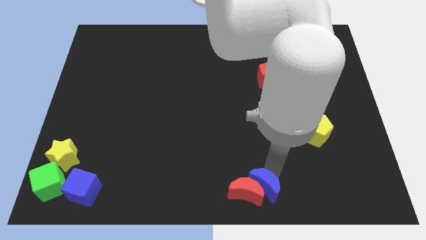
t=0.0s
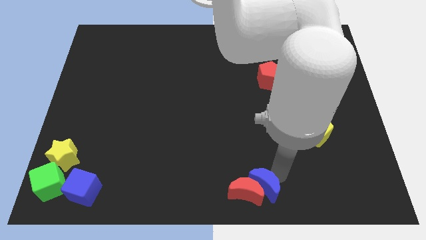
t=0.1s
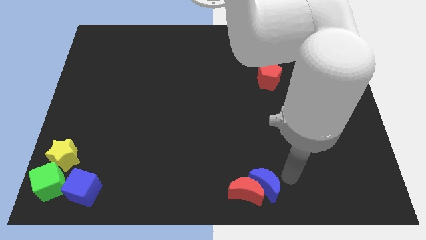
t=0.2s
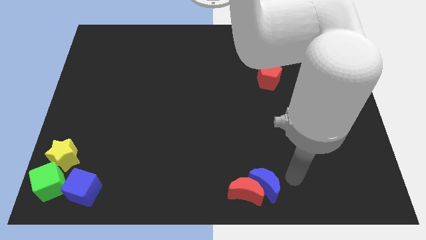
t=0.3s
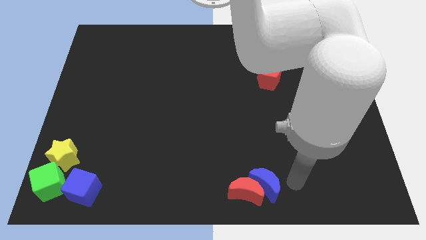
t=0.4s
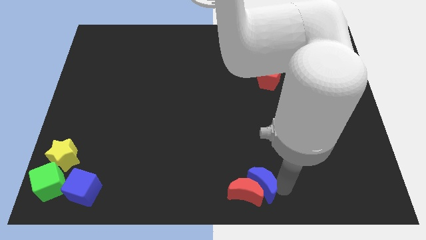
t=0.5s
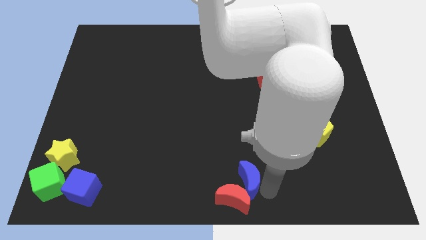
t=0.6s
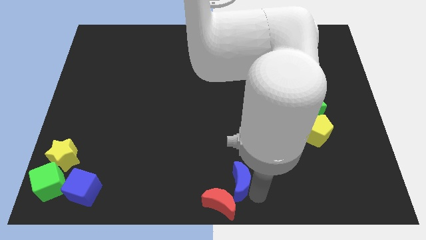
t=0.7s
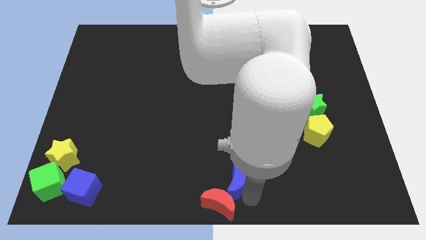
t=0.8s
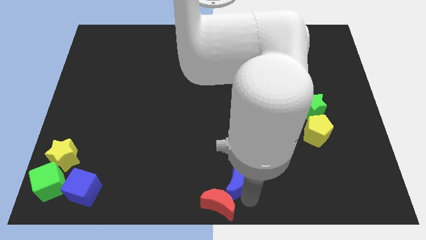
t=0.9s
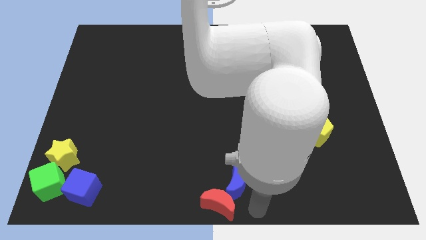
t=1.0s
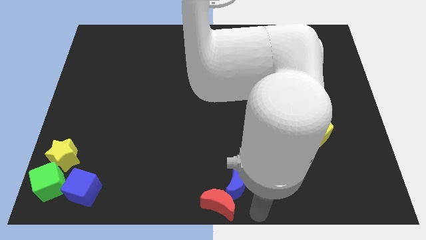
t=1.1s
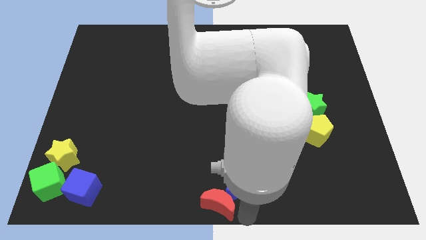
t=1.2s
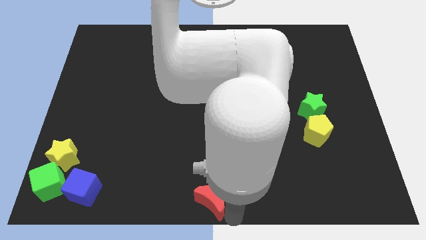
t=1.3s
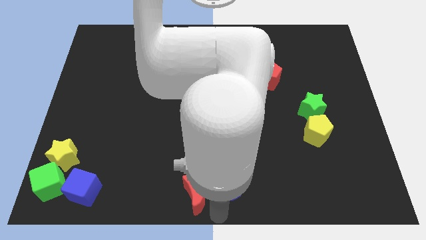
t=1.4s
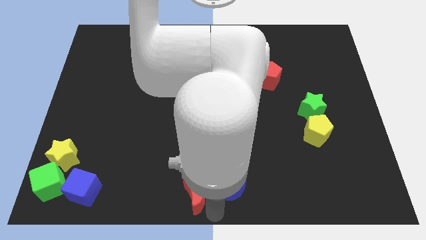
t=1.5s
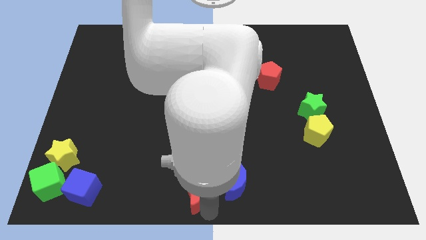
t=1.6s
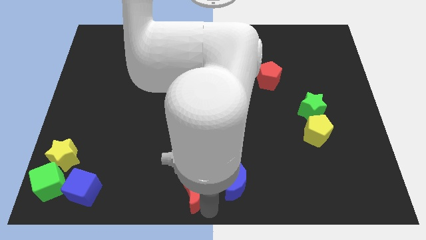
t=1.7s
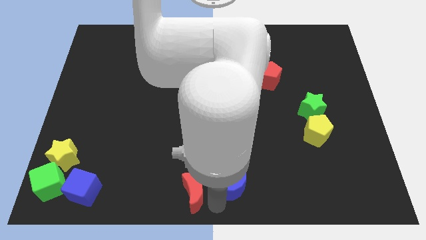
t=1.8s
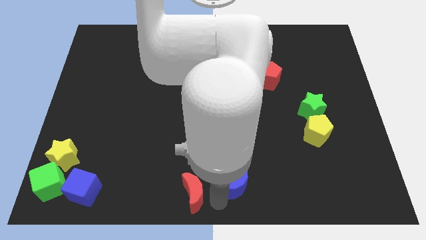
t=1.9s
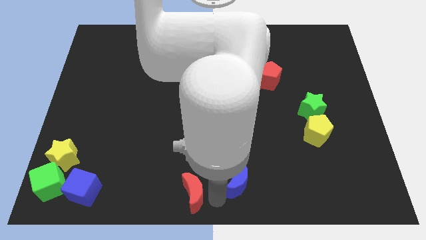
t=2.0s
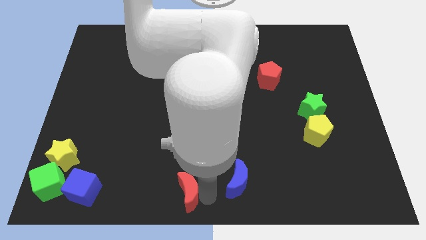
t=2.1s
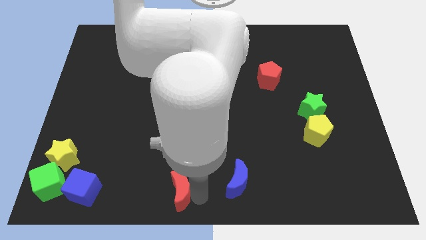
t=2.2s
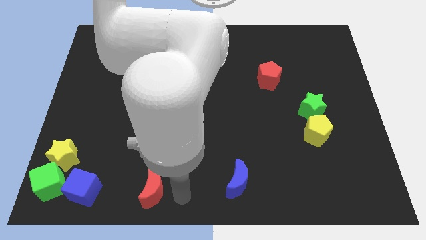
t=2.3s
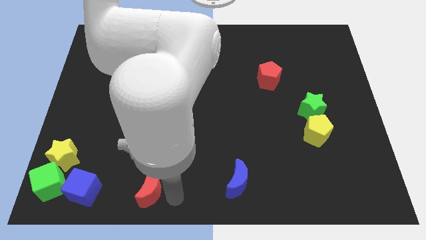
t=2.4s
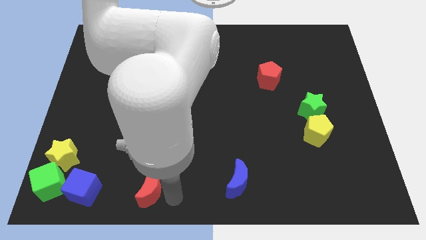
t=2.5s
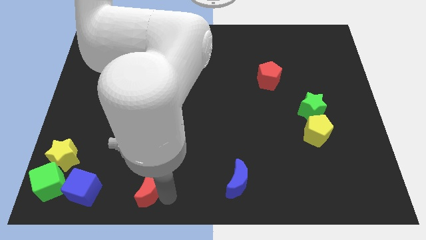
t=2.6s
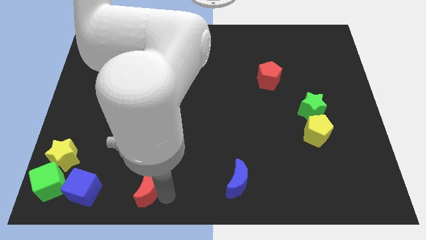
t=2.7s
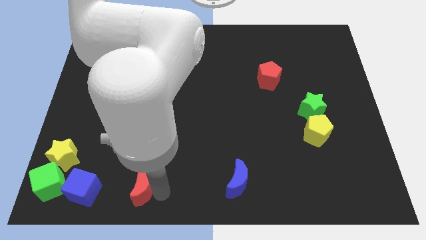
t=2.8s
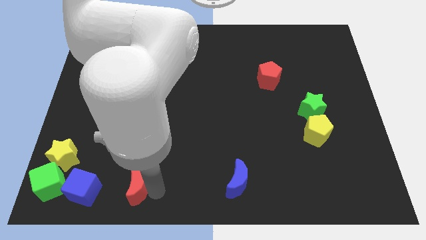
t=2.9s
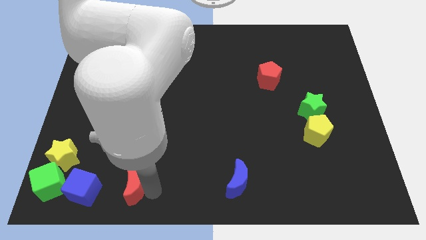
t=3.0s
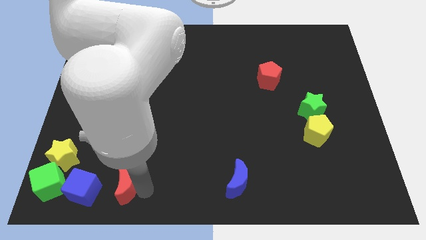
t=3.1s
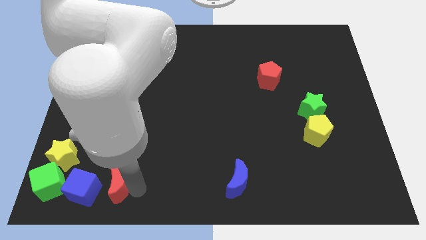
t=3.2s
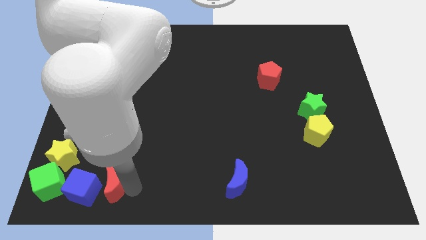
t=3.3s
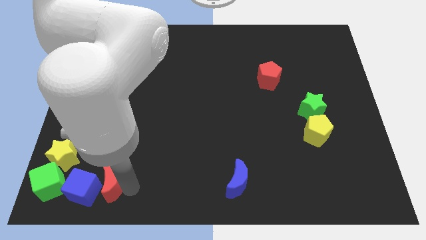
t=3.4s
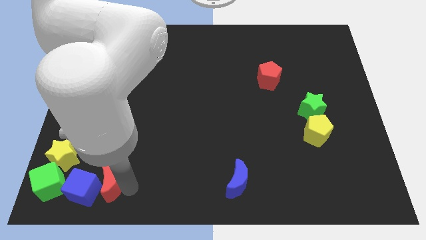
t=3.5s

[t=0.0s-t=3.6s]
place the red moon top right to the blue cube

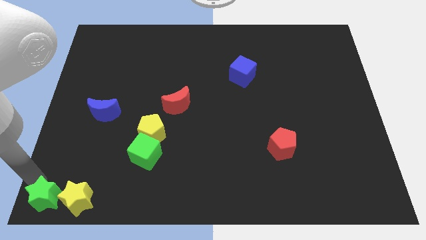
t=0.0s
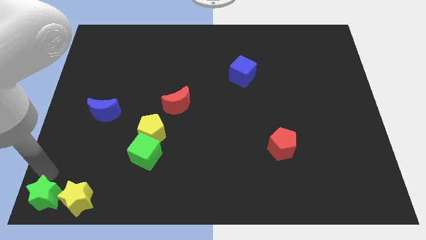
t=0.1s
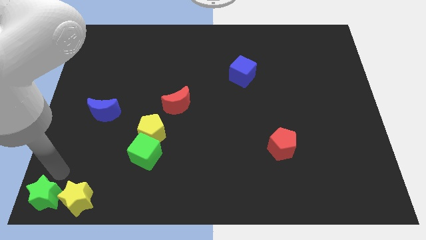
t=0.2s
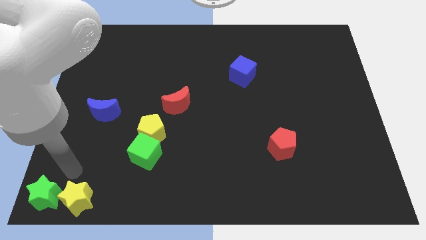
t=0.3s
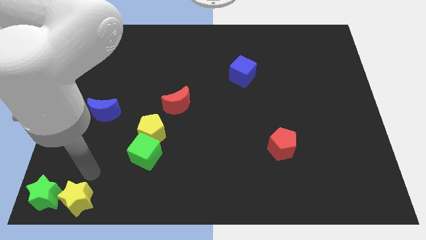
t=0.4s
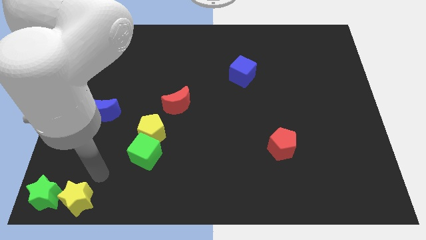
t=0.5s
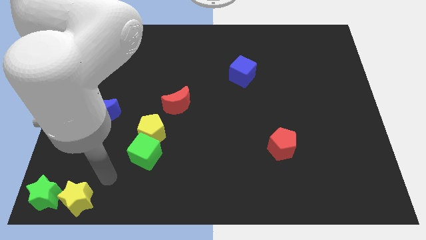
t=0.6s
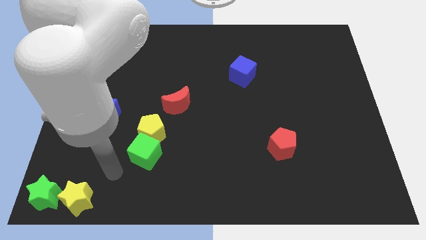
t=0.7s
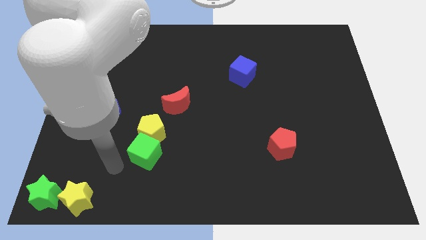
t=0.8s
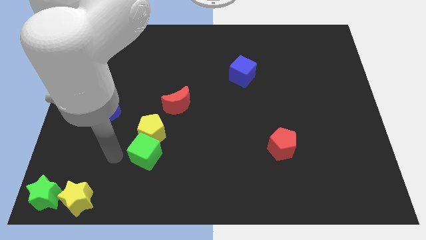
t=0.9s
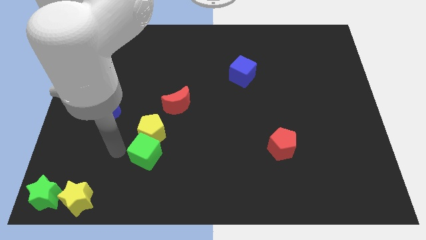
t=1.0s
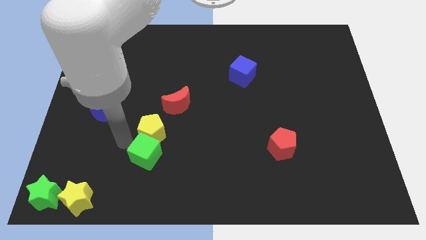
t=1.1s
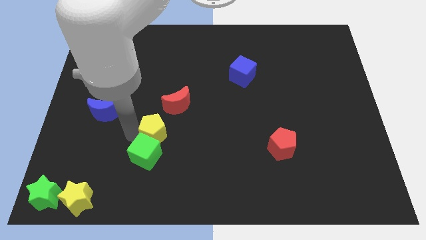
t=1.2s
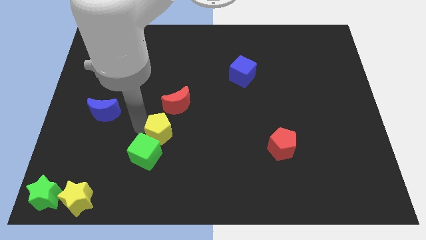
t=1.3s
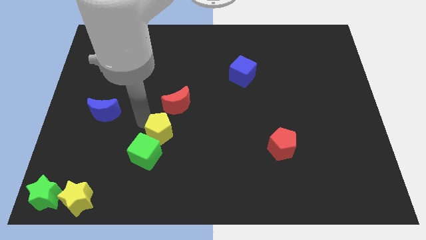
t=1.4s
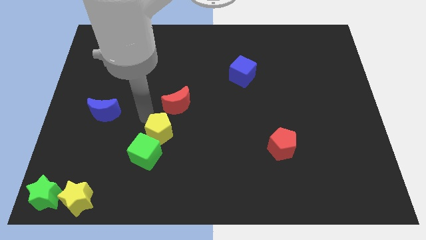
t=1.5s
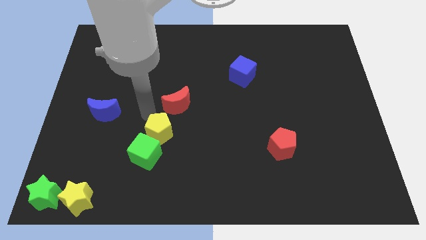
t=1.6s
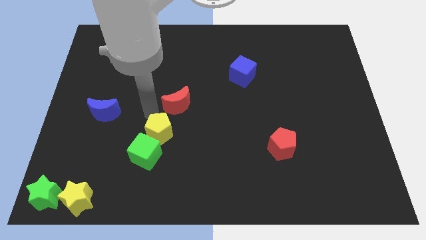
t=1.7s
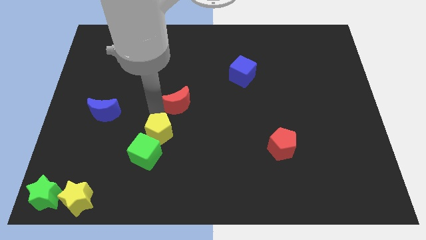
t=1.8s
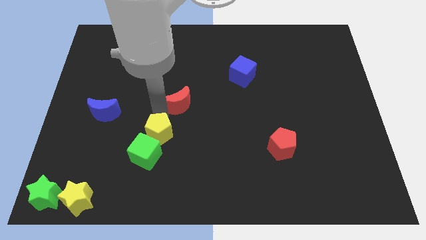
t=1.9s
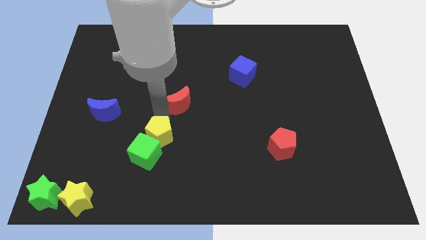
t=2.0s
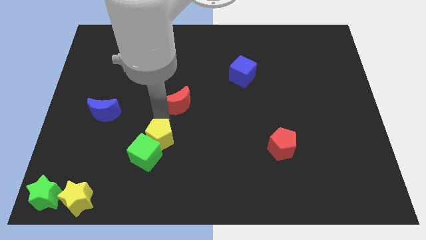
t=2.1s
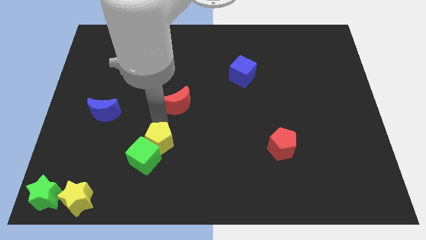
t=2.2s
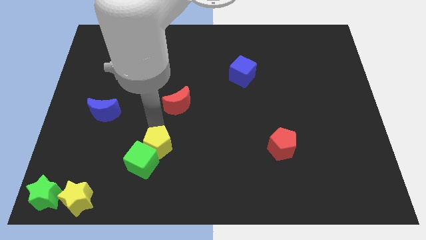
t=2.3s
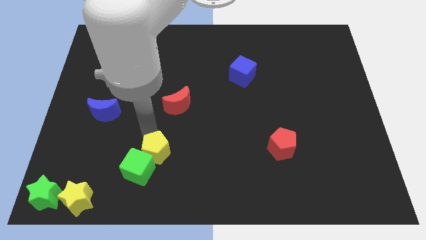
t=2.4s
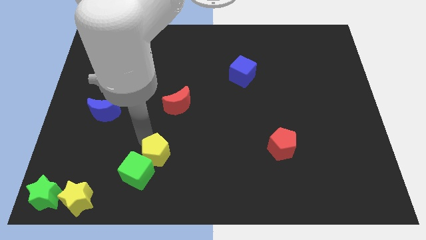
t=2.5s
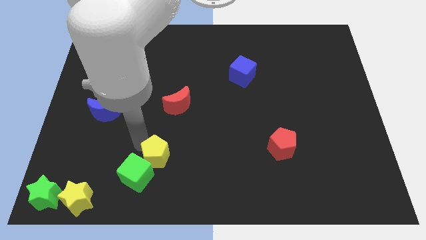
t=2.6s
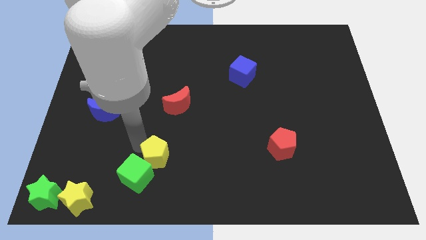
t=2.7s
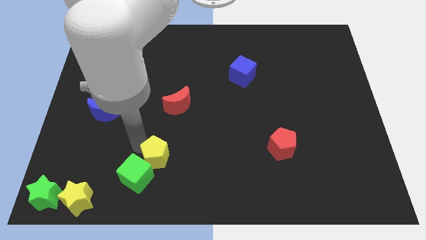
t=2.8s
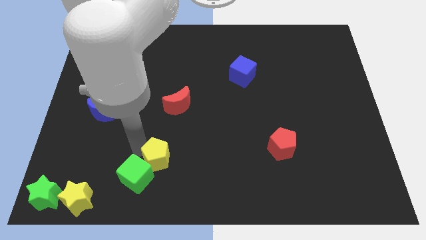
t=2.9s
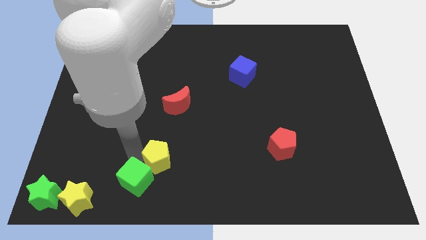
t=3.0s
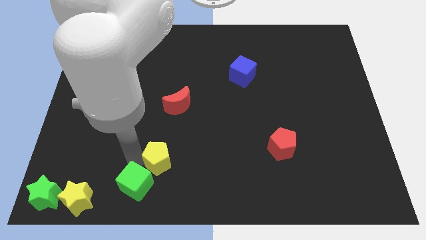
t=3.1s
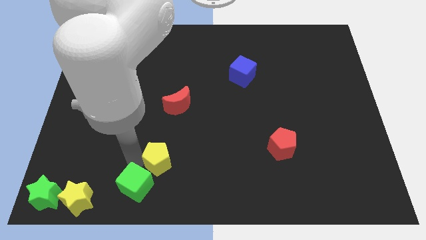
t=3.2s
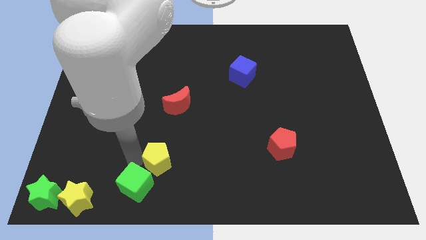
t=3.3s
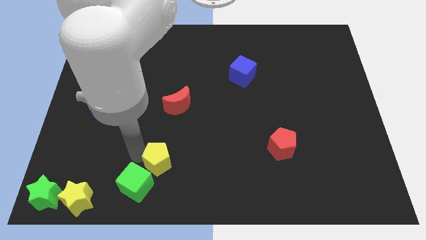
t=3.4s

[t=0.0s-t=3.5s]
push the green cube with the yellow star slightly towards the the bottom left of the board

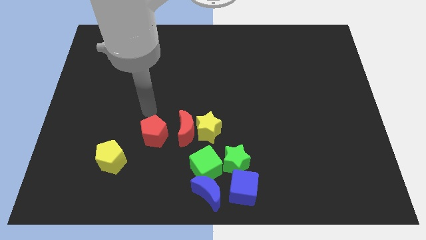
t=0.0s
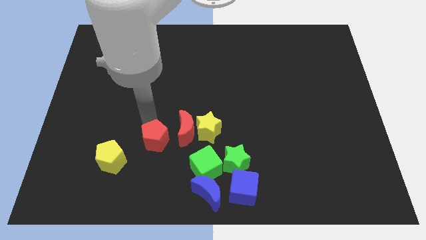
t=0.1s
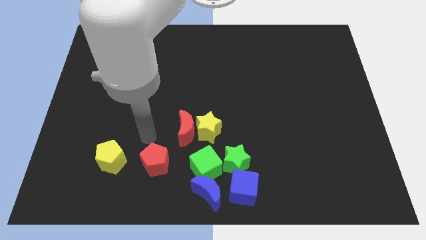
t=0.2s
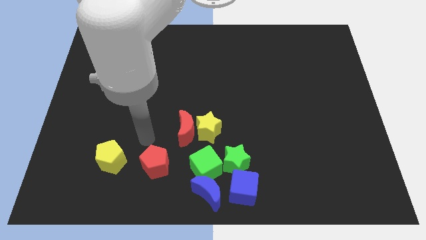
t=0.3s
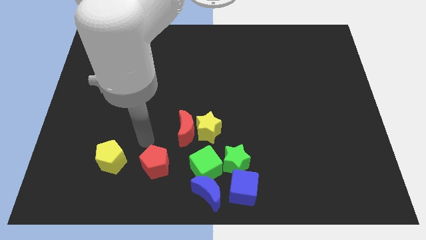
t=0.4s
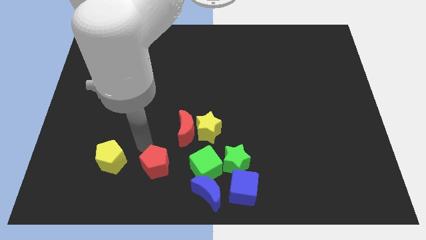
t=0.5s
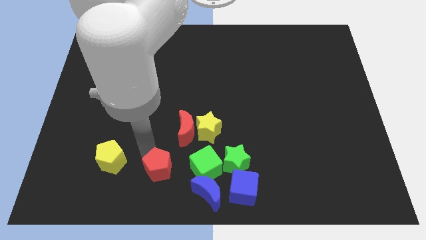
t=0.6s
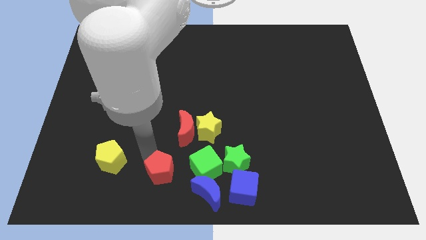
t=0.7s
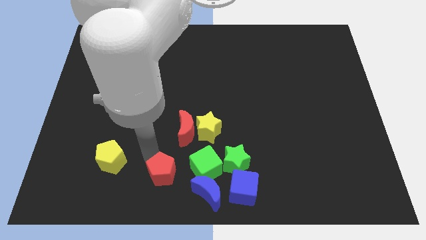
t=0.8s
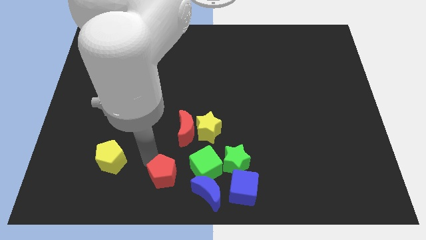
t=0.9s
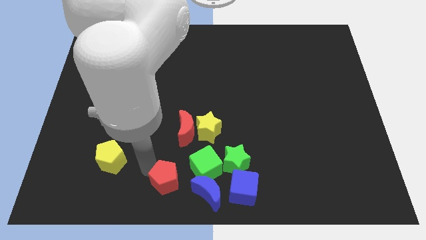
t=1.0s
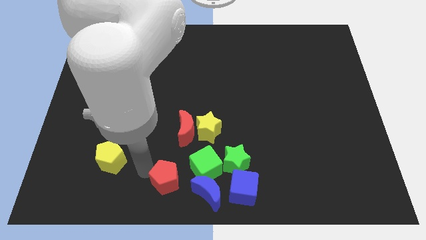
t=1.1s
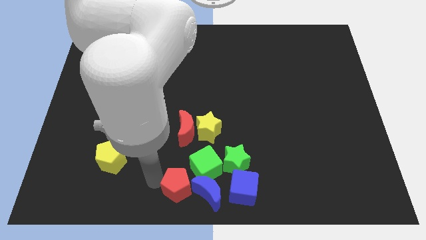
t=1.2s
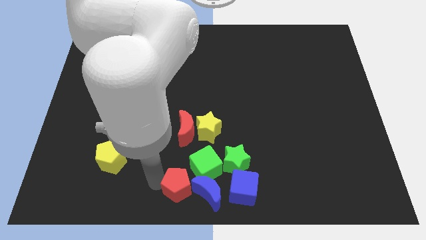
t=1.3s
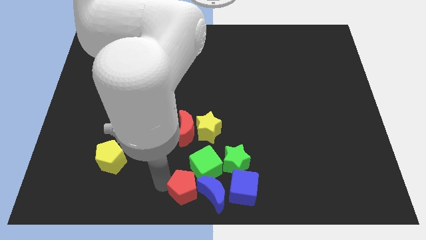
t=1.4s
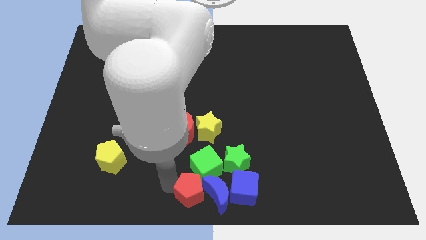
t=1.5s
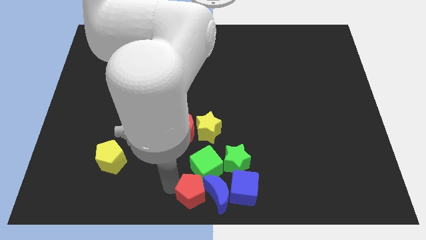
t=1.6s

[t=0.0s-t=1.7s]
push the red pentagon into the group of blocks

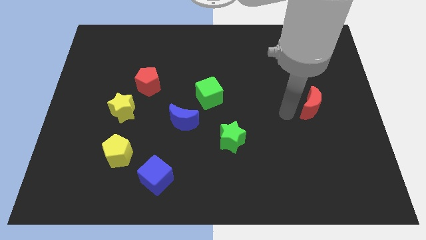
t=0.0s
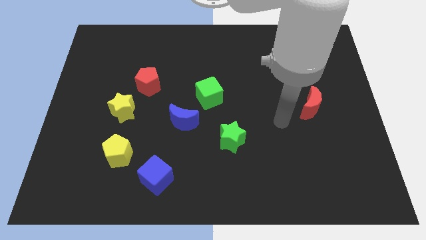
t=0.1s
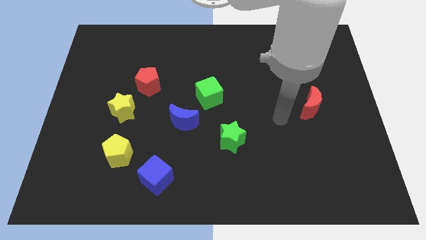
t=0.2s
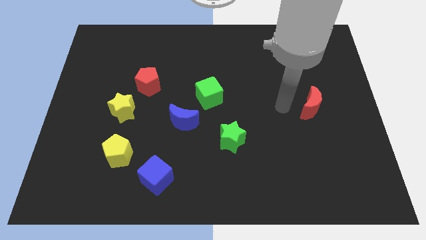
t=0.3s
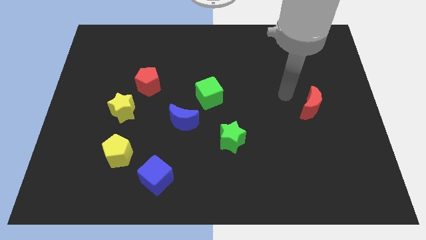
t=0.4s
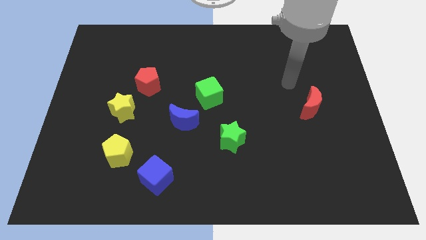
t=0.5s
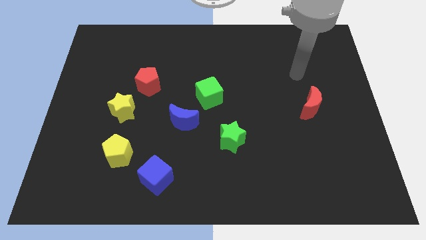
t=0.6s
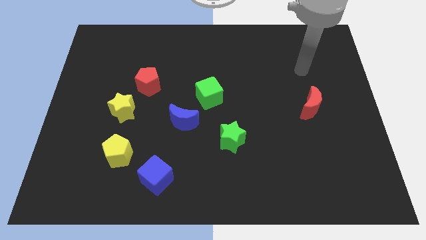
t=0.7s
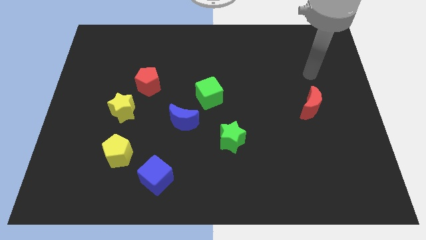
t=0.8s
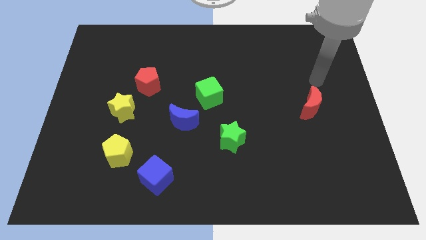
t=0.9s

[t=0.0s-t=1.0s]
move arm away from red moon
